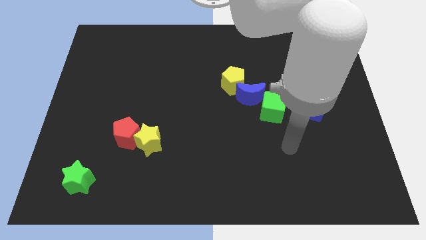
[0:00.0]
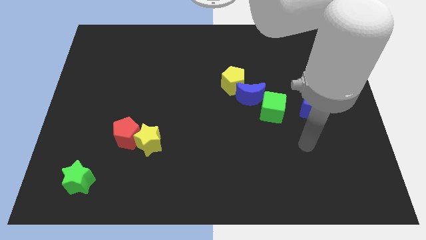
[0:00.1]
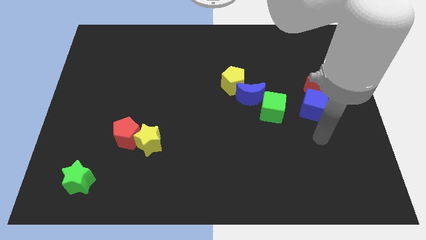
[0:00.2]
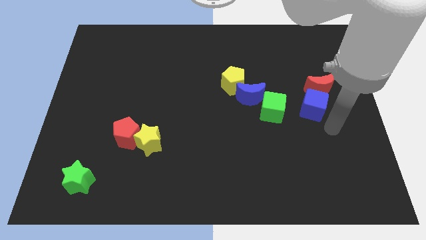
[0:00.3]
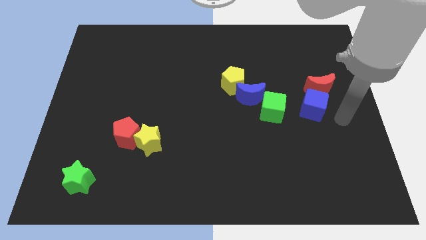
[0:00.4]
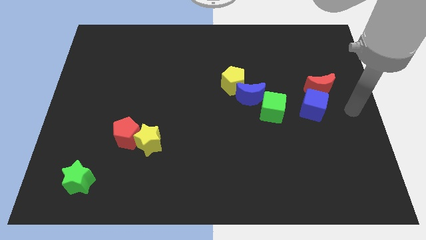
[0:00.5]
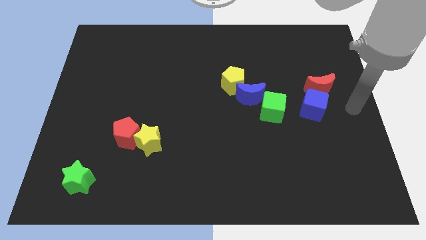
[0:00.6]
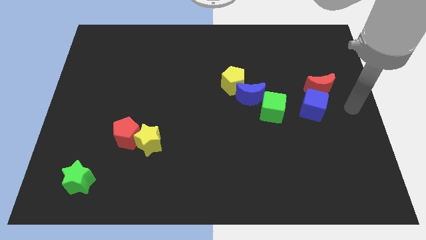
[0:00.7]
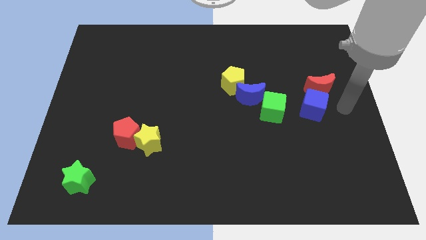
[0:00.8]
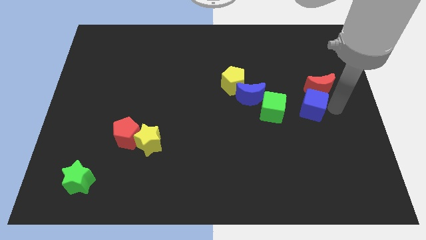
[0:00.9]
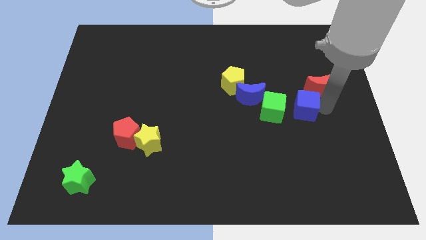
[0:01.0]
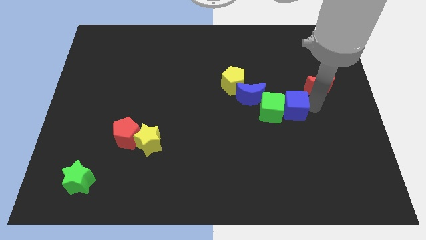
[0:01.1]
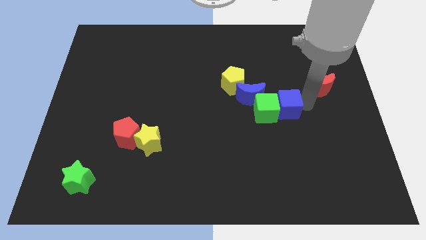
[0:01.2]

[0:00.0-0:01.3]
place the blue cube to the right of green cube

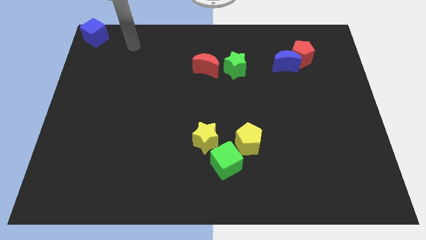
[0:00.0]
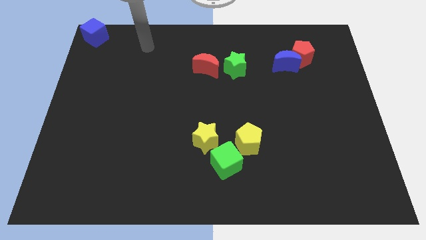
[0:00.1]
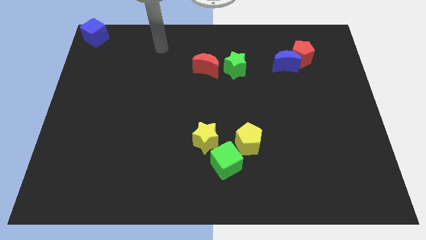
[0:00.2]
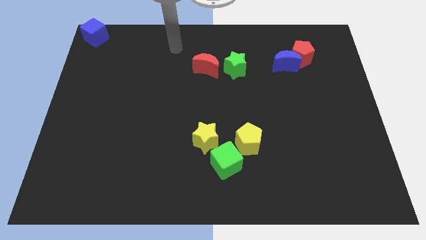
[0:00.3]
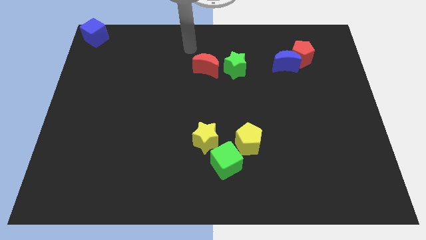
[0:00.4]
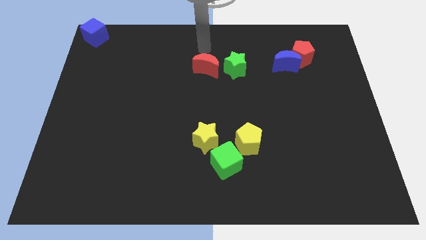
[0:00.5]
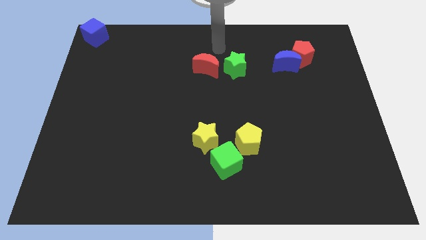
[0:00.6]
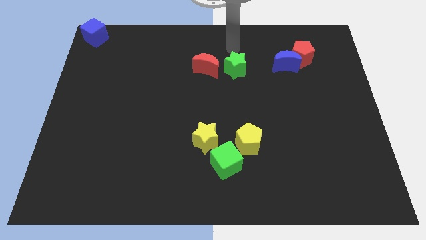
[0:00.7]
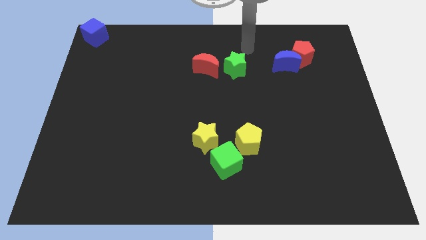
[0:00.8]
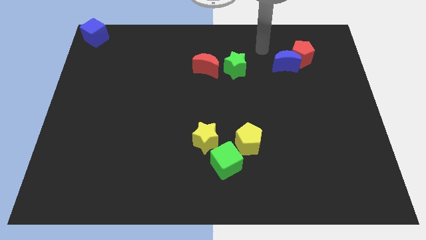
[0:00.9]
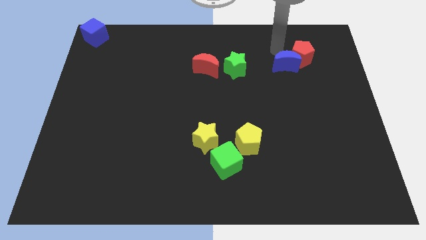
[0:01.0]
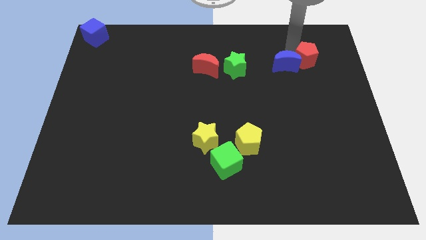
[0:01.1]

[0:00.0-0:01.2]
move your arm towards the top of blue crescent

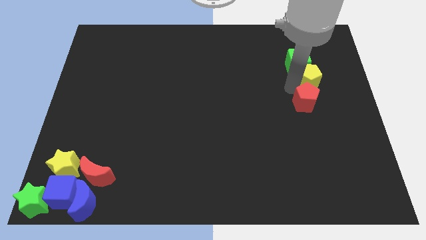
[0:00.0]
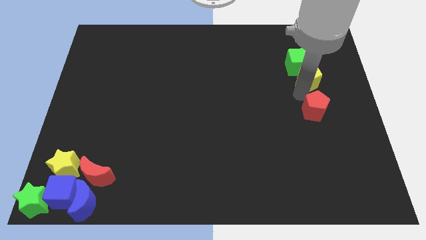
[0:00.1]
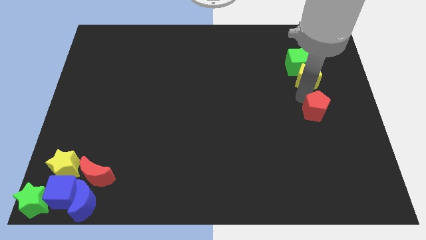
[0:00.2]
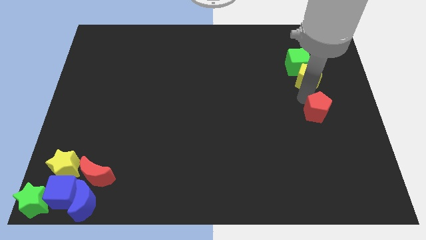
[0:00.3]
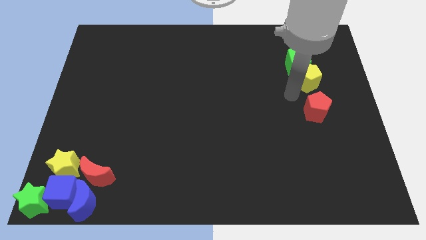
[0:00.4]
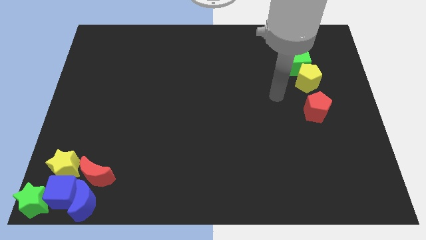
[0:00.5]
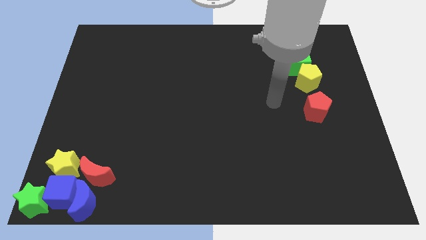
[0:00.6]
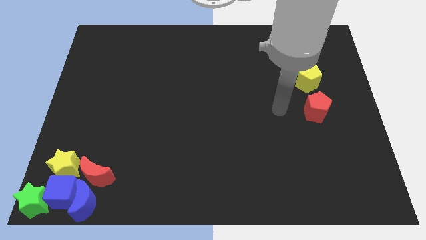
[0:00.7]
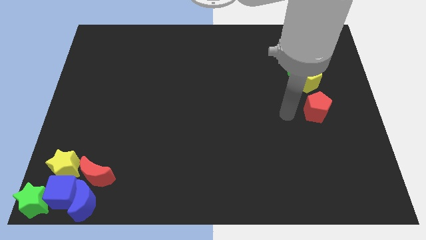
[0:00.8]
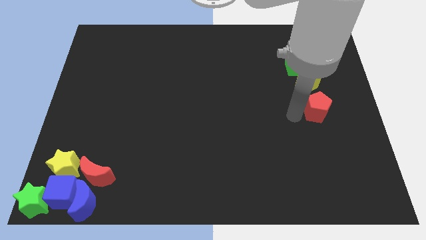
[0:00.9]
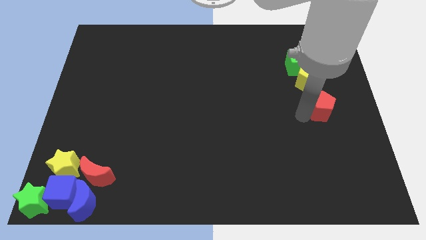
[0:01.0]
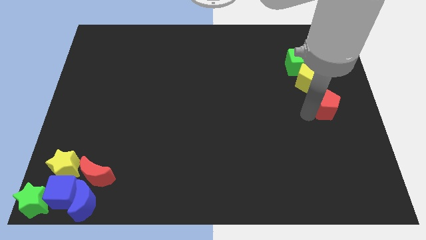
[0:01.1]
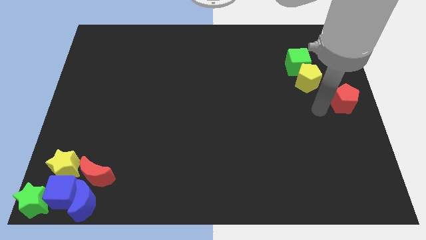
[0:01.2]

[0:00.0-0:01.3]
separate red pentagon from yellow pentagon

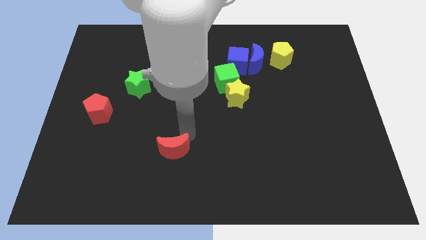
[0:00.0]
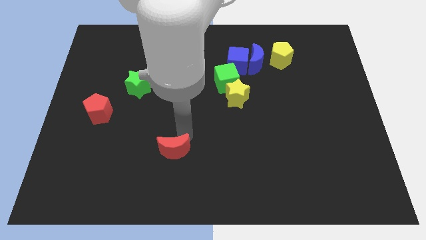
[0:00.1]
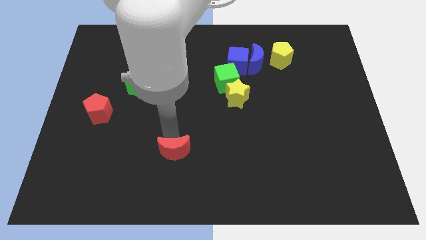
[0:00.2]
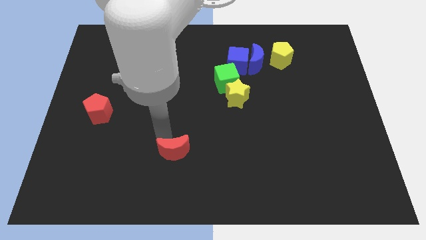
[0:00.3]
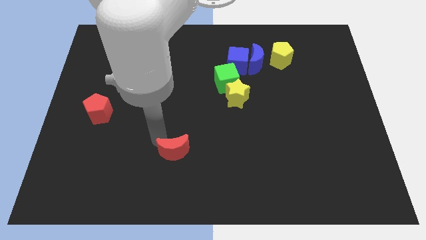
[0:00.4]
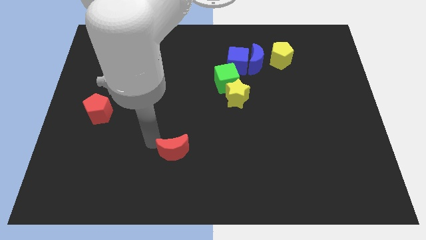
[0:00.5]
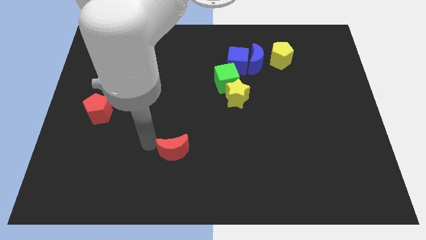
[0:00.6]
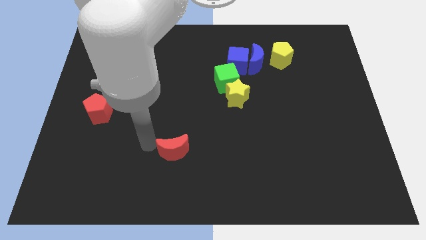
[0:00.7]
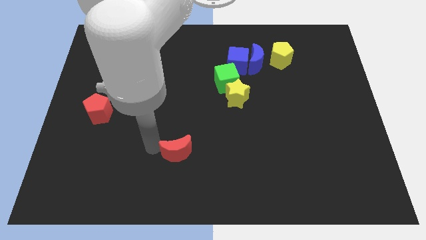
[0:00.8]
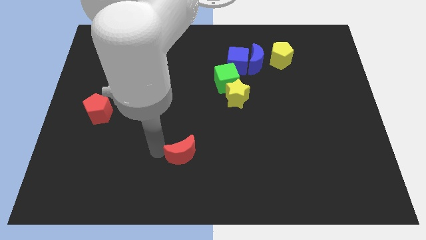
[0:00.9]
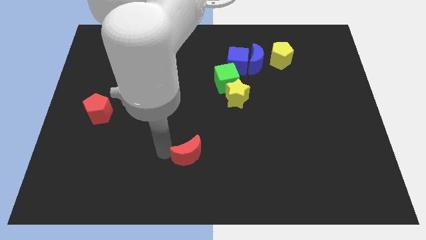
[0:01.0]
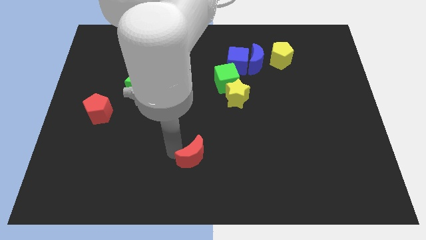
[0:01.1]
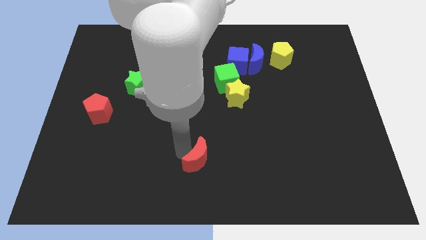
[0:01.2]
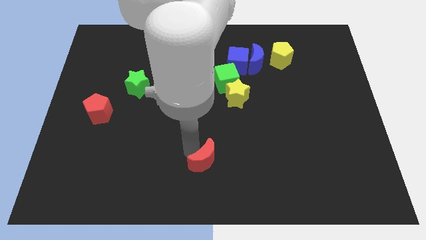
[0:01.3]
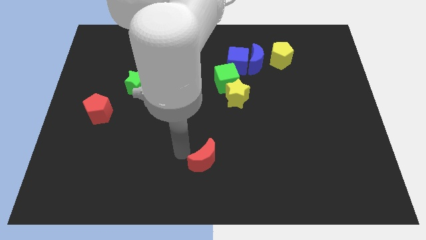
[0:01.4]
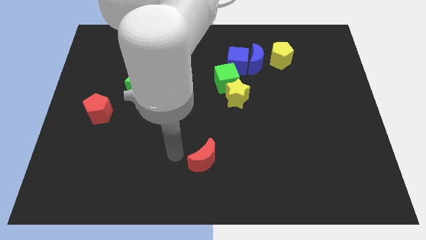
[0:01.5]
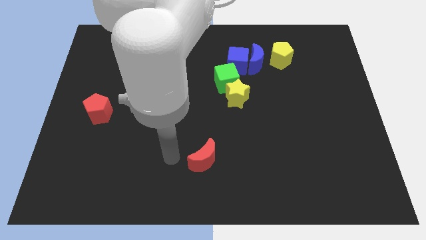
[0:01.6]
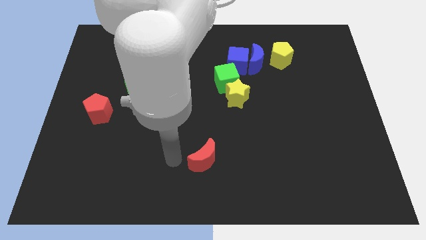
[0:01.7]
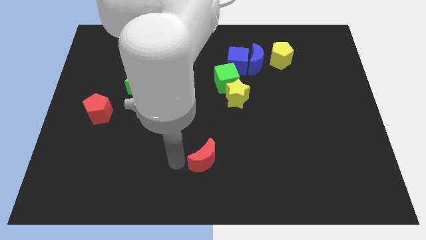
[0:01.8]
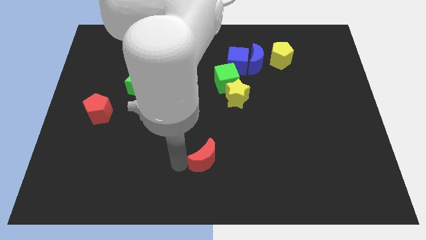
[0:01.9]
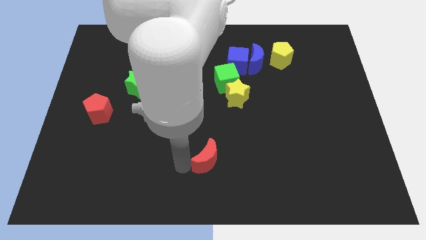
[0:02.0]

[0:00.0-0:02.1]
place the red moon to the bottom left of the yellow star

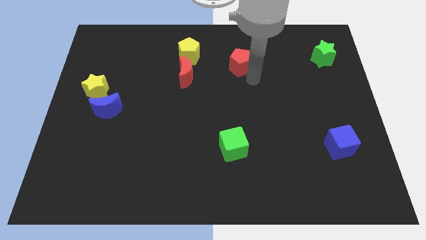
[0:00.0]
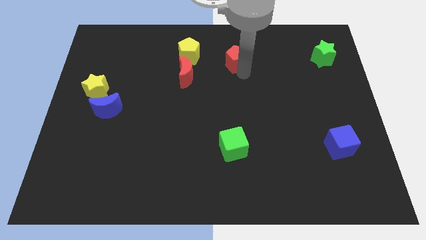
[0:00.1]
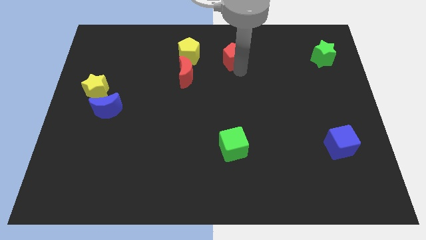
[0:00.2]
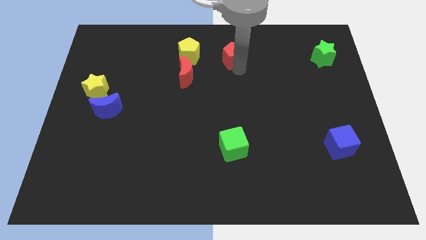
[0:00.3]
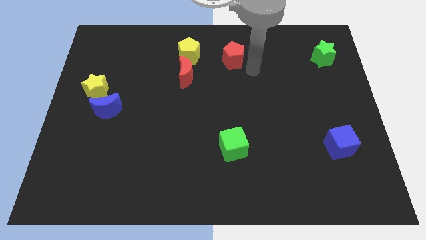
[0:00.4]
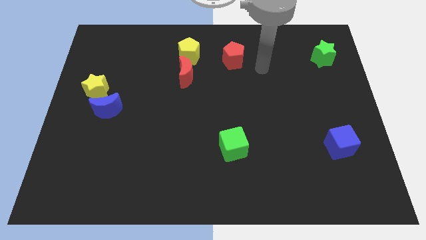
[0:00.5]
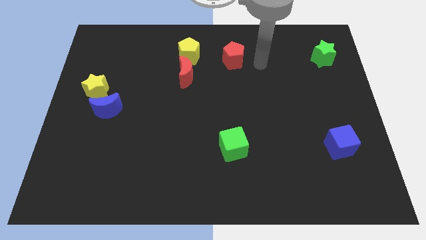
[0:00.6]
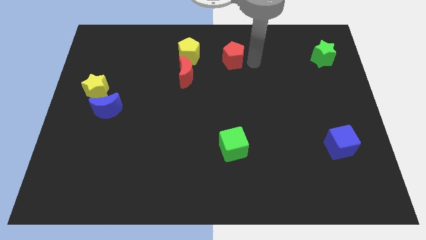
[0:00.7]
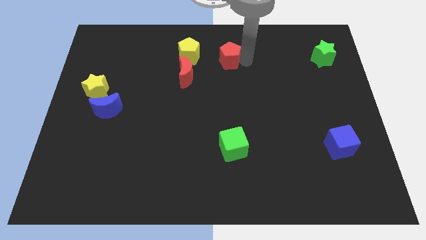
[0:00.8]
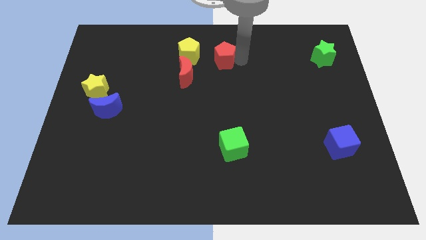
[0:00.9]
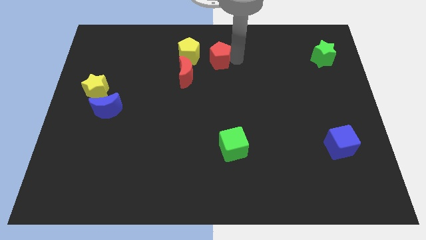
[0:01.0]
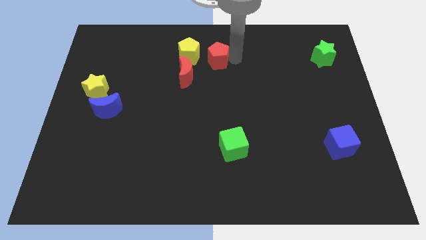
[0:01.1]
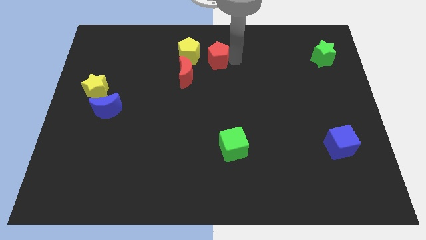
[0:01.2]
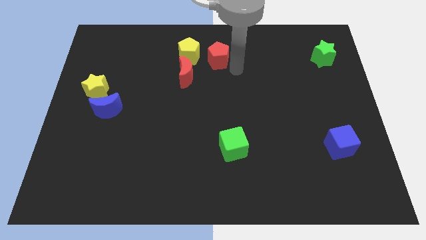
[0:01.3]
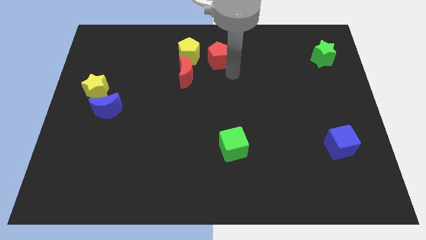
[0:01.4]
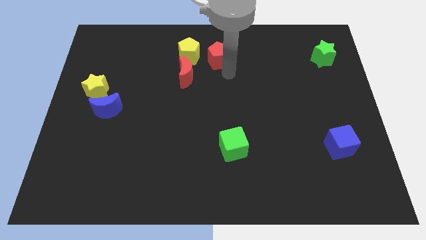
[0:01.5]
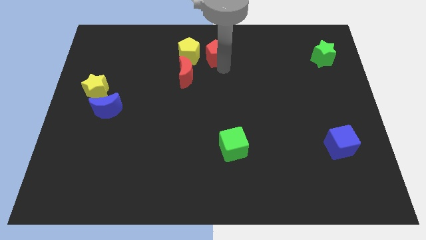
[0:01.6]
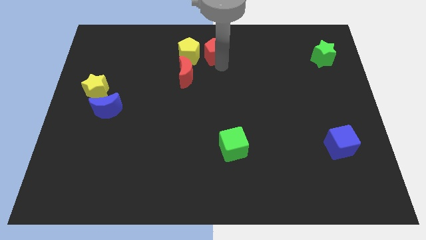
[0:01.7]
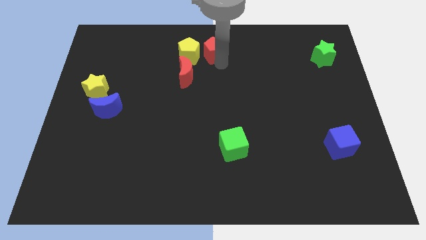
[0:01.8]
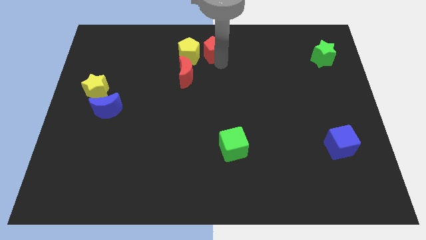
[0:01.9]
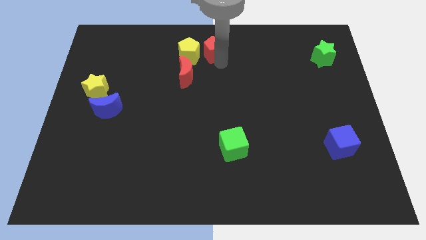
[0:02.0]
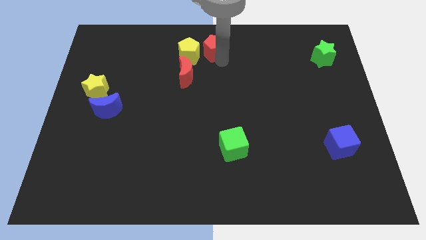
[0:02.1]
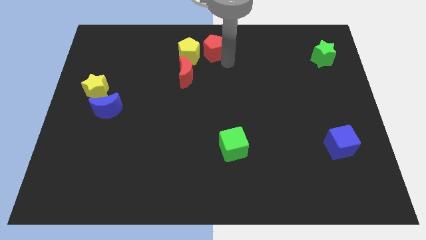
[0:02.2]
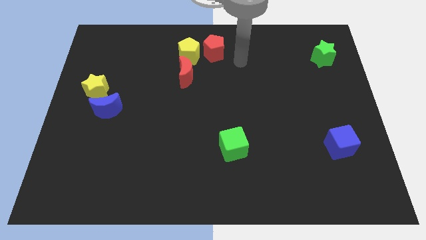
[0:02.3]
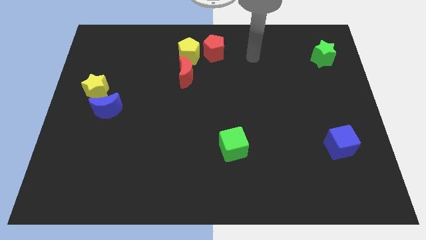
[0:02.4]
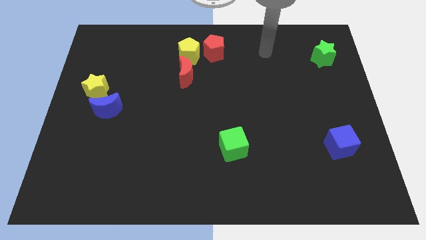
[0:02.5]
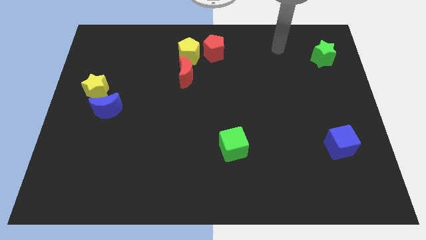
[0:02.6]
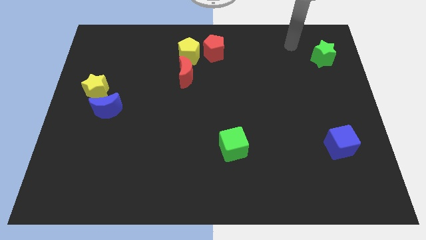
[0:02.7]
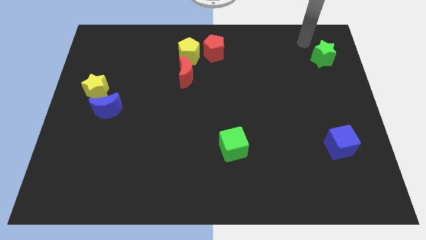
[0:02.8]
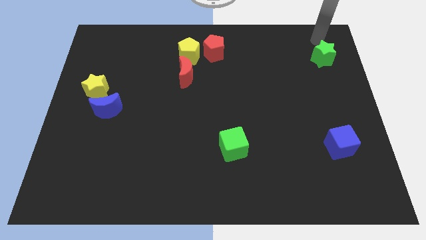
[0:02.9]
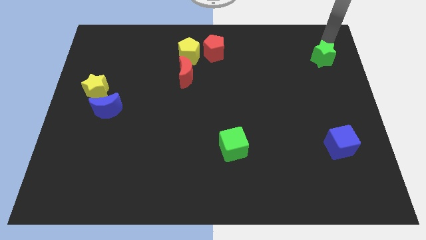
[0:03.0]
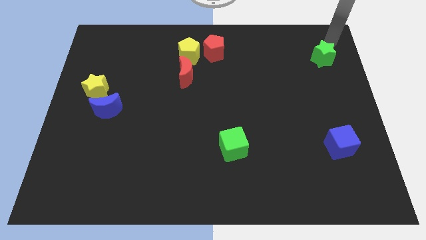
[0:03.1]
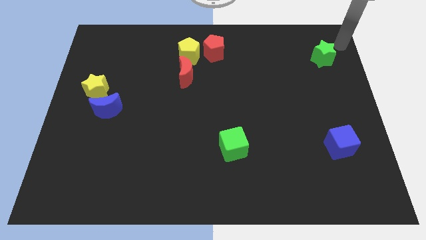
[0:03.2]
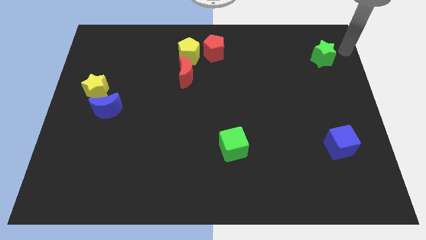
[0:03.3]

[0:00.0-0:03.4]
move the red pentagon to the right of the yellow pentagon
